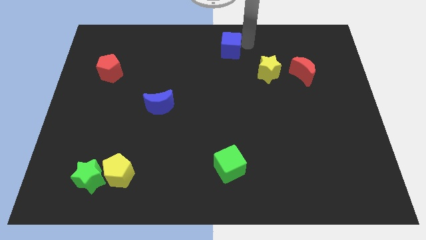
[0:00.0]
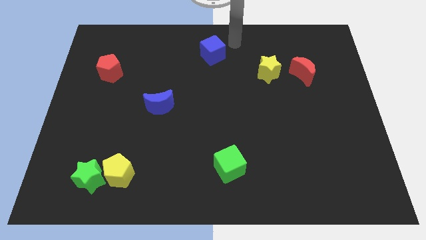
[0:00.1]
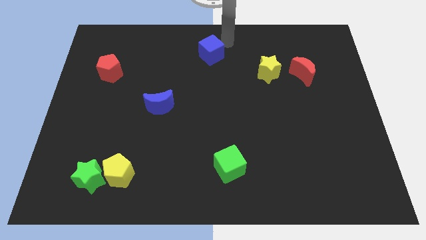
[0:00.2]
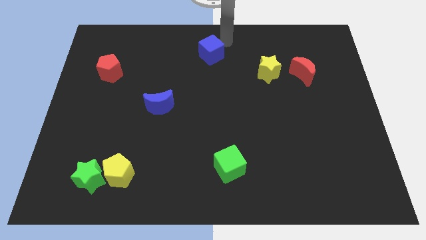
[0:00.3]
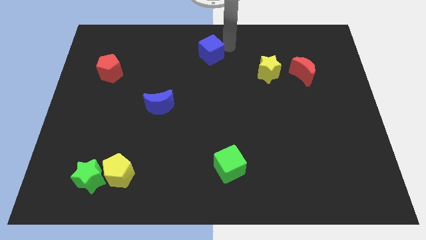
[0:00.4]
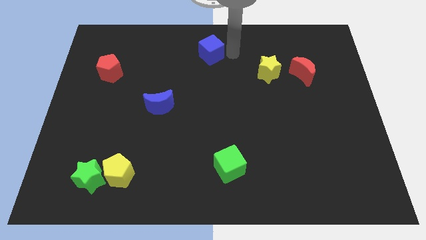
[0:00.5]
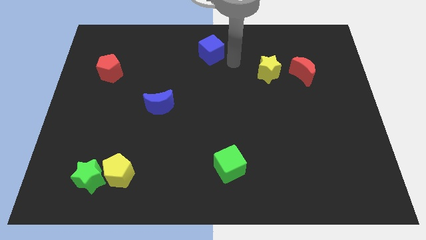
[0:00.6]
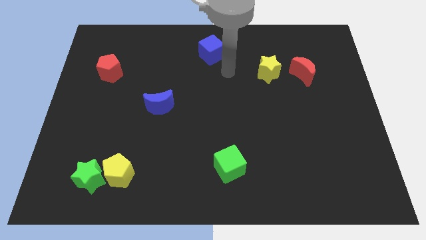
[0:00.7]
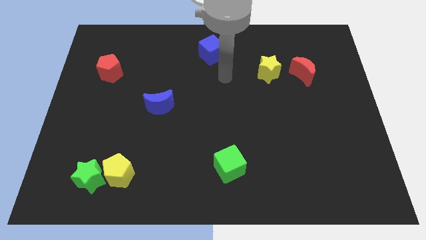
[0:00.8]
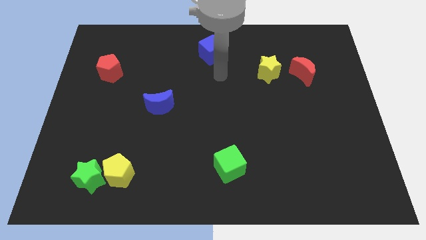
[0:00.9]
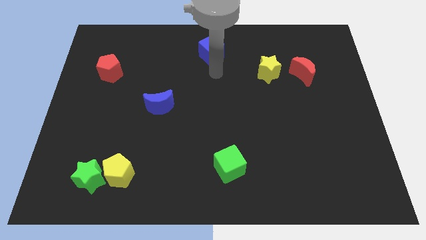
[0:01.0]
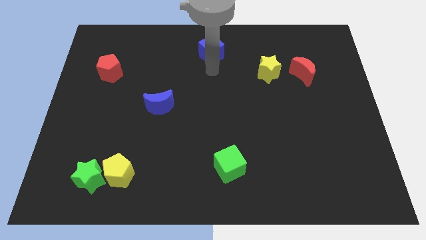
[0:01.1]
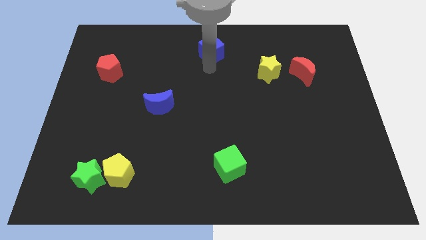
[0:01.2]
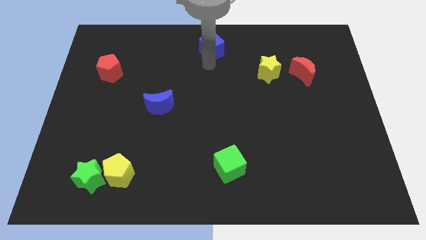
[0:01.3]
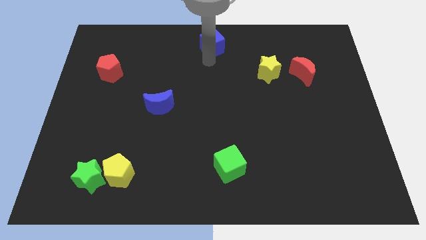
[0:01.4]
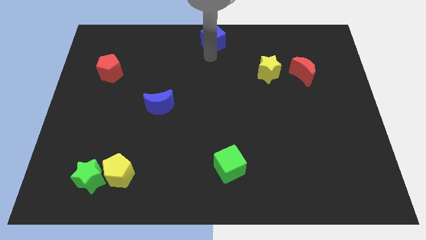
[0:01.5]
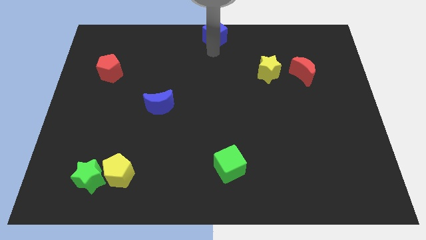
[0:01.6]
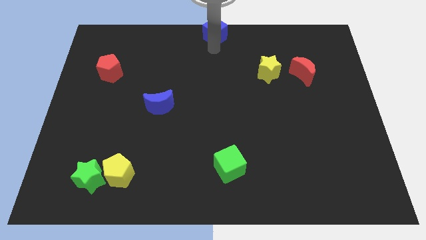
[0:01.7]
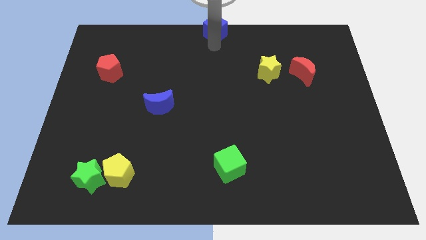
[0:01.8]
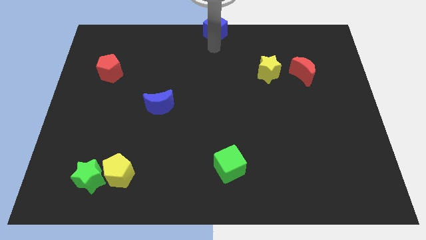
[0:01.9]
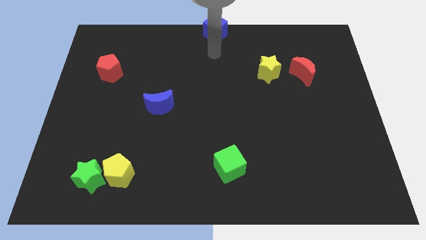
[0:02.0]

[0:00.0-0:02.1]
place the blue cube at the top center of the board

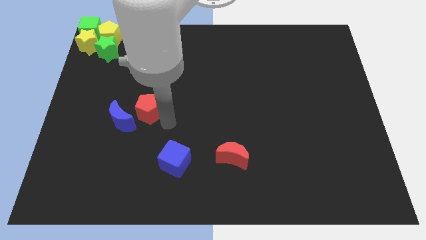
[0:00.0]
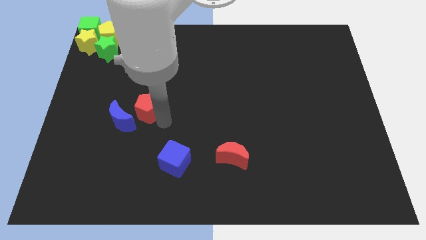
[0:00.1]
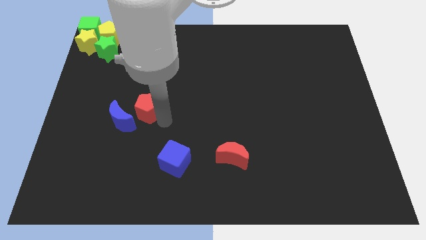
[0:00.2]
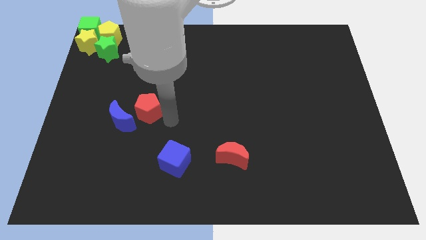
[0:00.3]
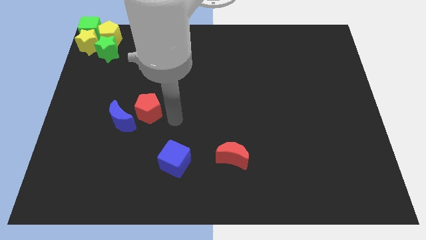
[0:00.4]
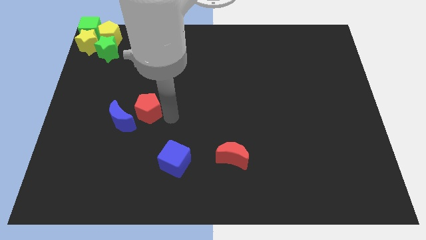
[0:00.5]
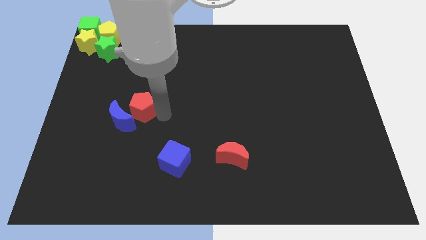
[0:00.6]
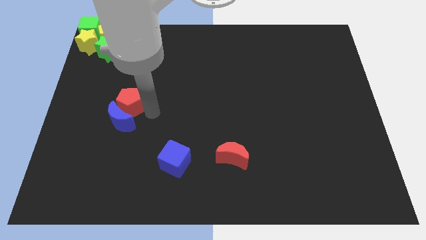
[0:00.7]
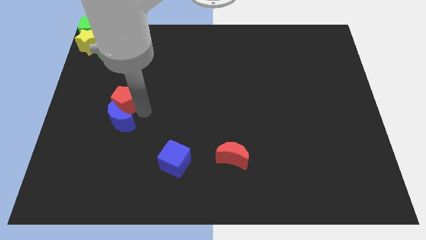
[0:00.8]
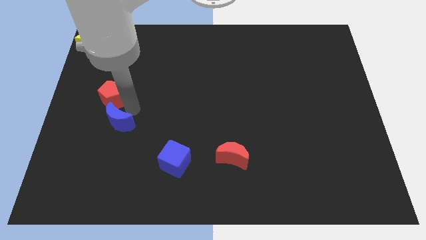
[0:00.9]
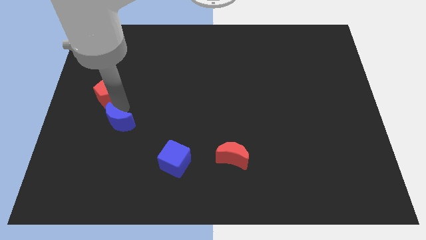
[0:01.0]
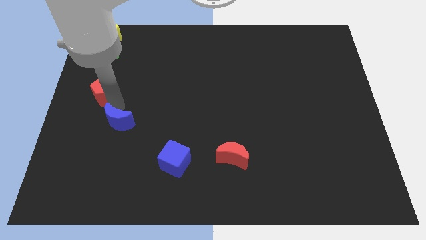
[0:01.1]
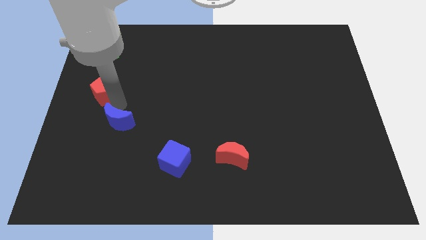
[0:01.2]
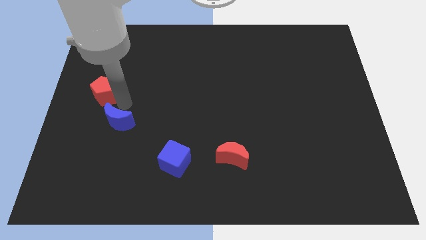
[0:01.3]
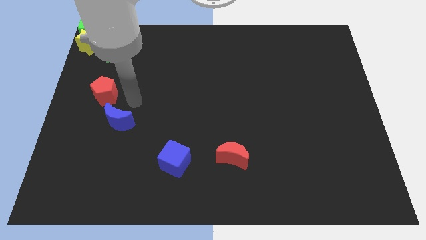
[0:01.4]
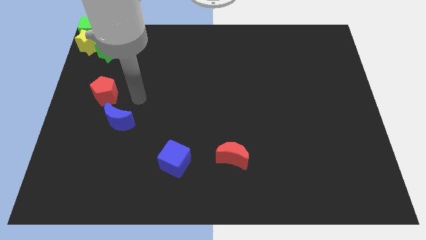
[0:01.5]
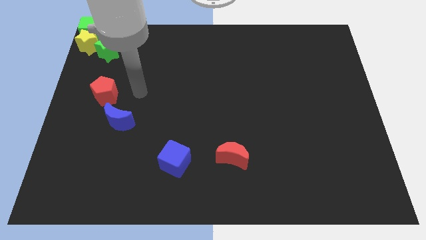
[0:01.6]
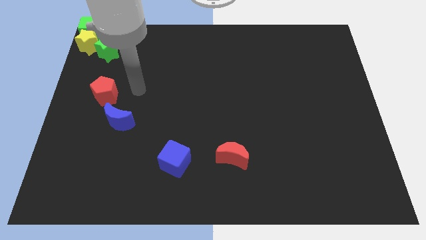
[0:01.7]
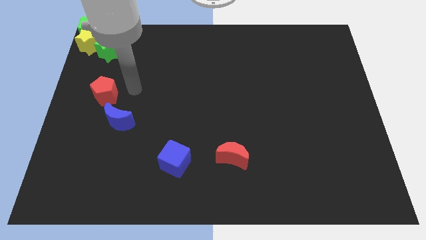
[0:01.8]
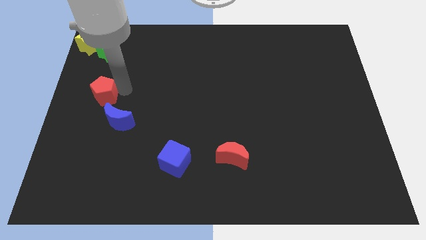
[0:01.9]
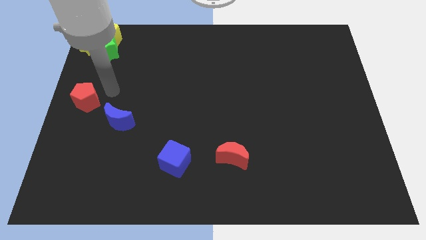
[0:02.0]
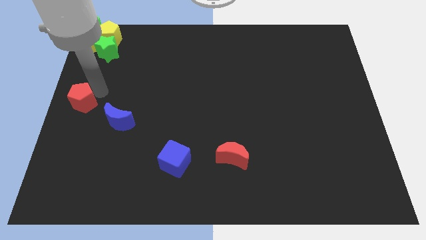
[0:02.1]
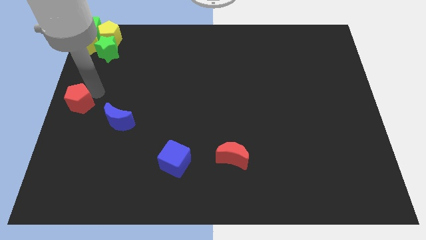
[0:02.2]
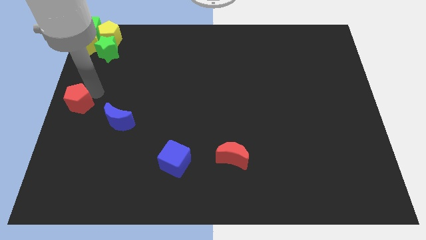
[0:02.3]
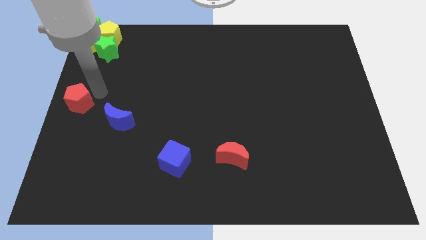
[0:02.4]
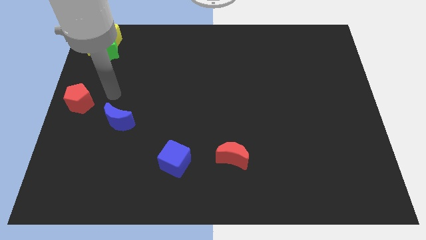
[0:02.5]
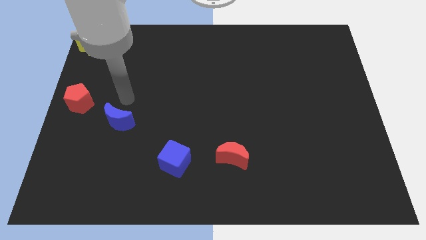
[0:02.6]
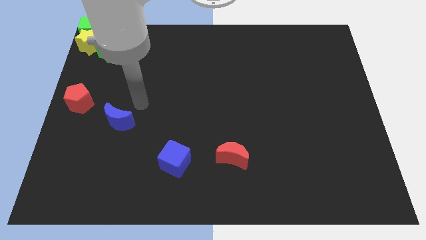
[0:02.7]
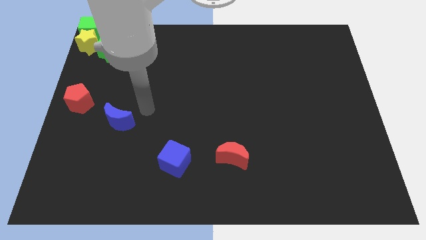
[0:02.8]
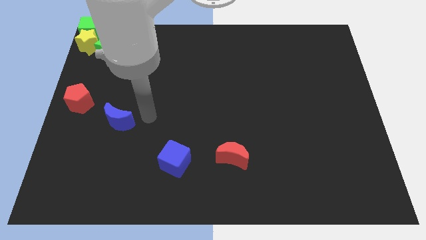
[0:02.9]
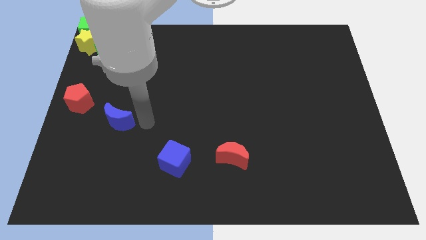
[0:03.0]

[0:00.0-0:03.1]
put the red pentagon vertically below the yellow star

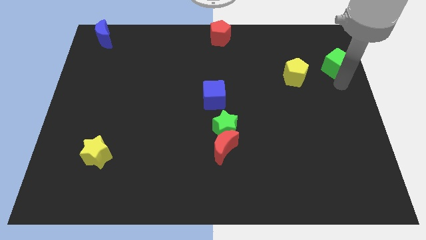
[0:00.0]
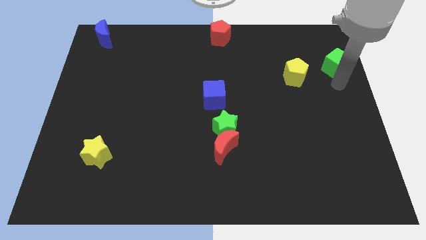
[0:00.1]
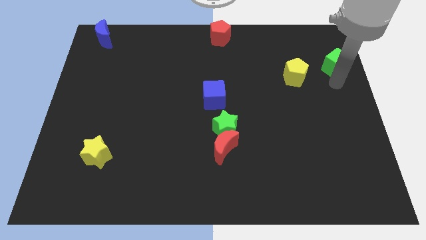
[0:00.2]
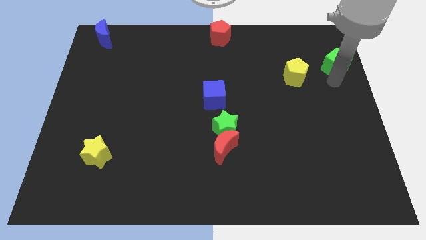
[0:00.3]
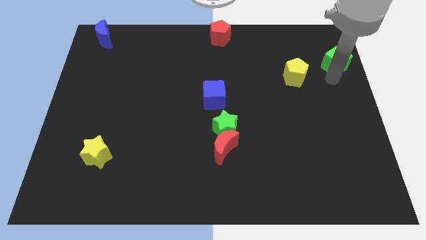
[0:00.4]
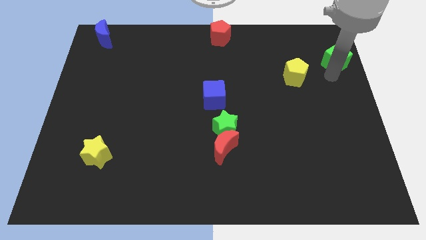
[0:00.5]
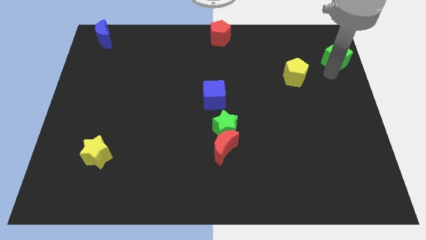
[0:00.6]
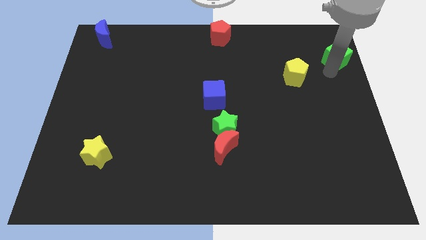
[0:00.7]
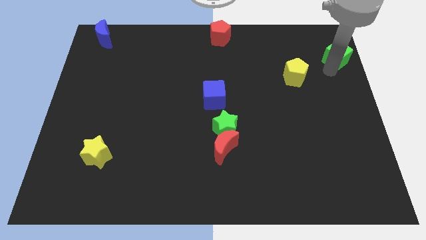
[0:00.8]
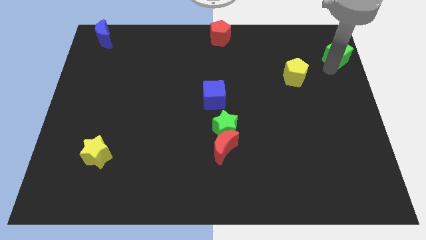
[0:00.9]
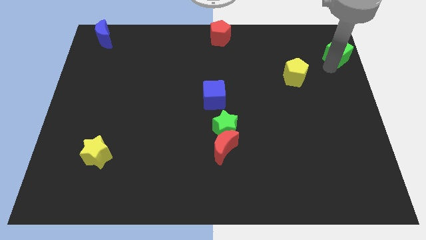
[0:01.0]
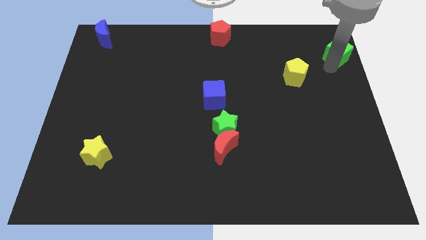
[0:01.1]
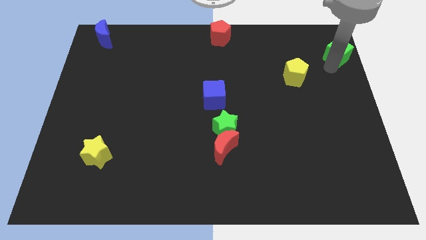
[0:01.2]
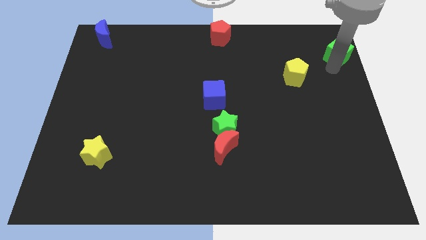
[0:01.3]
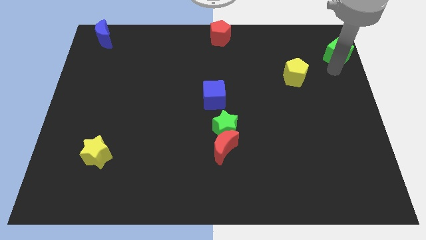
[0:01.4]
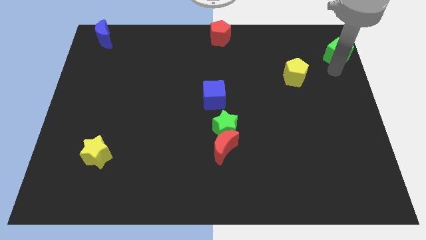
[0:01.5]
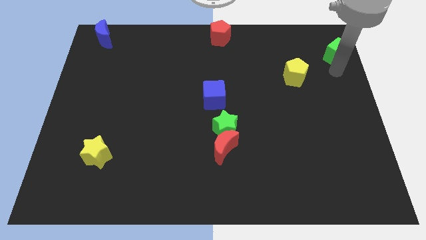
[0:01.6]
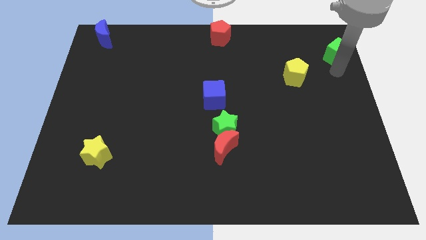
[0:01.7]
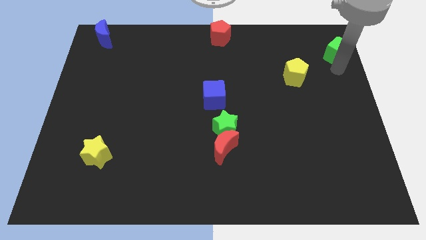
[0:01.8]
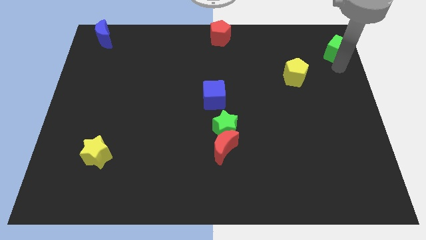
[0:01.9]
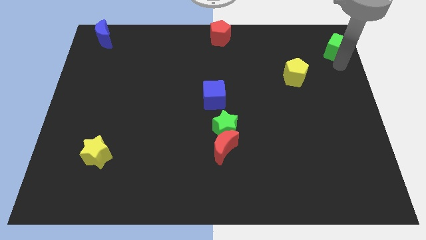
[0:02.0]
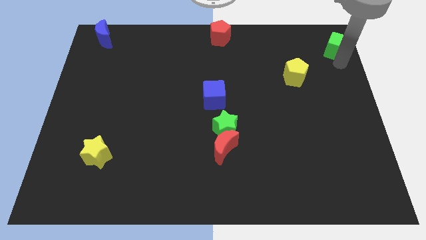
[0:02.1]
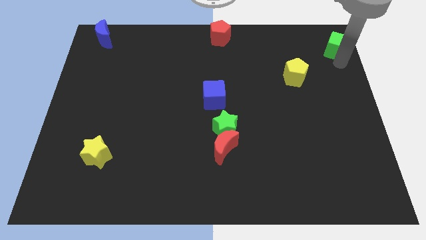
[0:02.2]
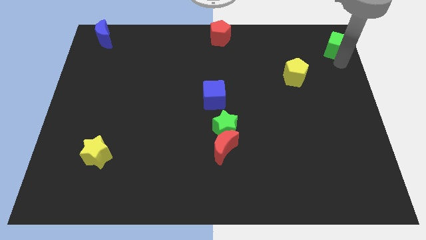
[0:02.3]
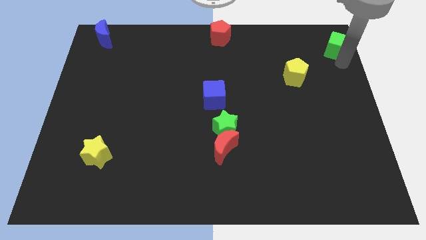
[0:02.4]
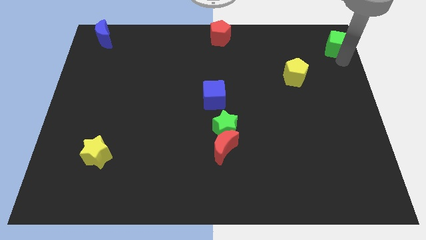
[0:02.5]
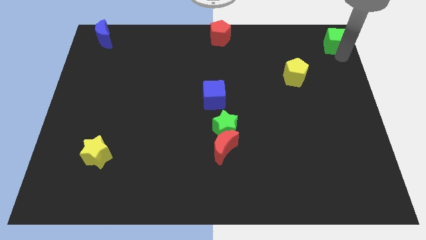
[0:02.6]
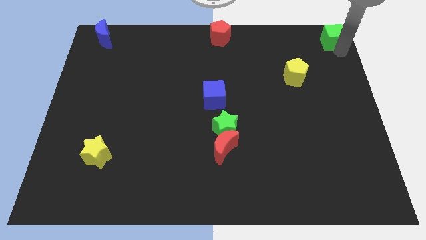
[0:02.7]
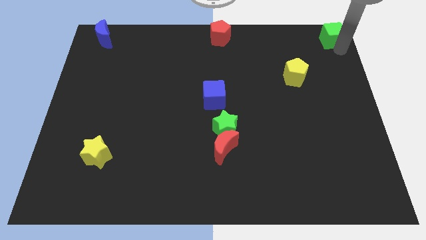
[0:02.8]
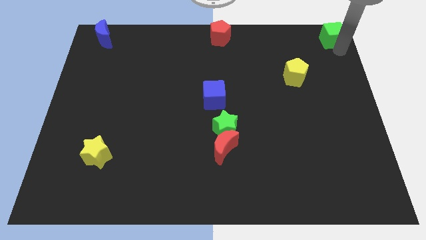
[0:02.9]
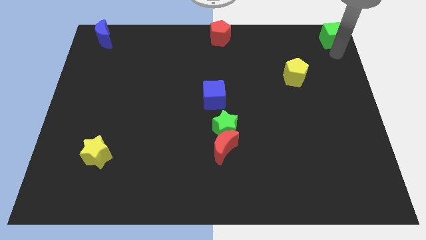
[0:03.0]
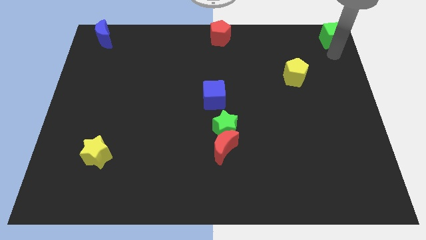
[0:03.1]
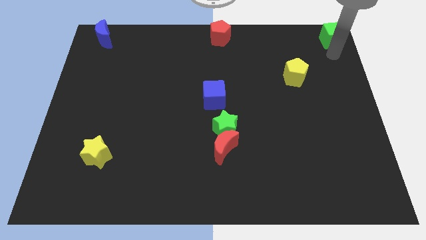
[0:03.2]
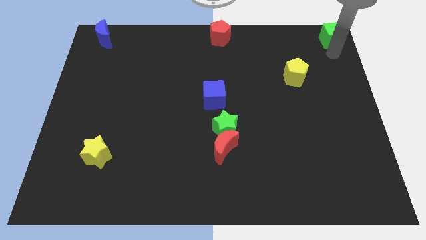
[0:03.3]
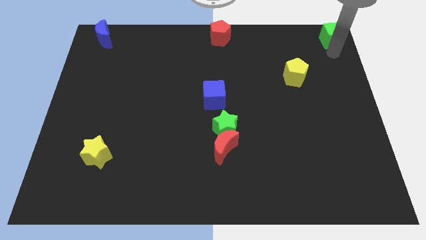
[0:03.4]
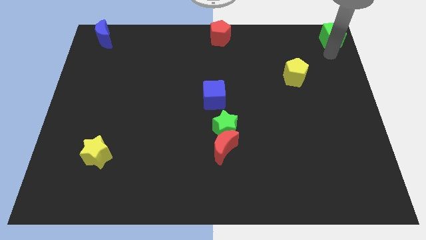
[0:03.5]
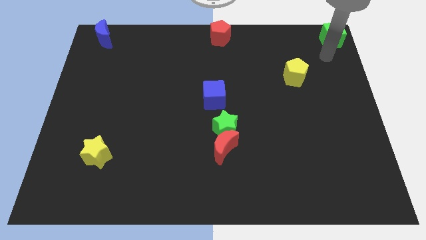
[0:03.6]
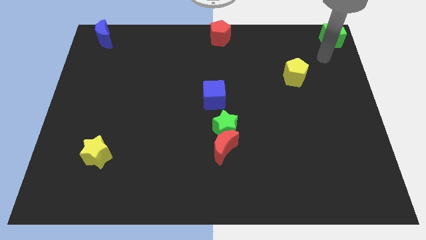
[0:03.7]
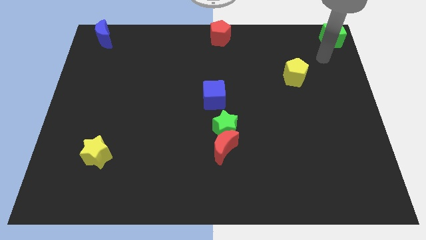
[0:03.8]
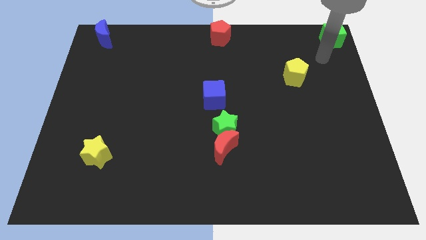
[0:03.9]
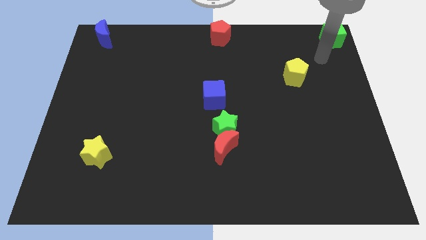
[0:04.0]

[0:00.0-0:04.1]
place the green cube to the top right corner of the board
